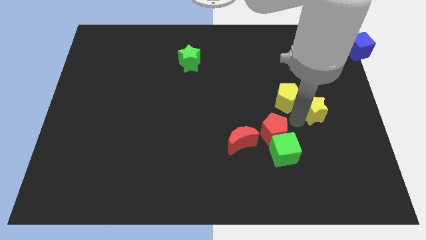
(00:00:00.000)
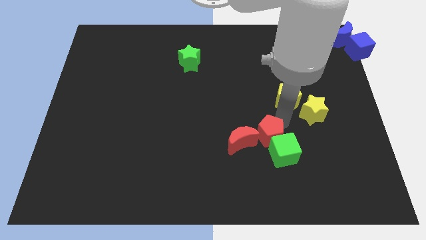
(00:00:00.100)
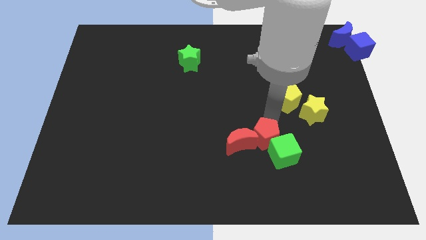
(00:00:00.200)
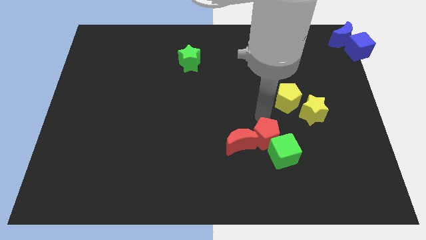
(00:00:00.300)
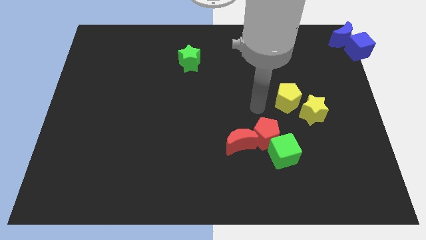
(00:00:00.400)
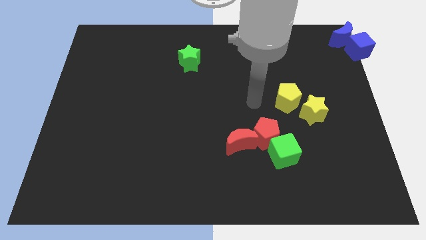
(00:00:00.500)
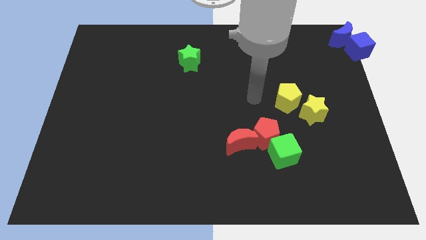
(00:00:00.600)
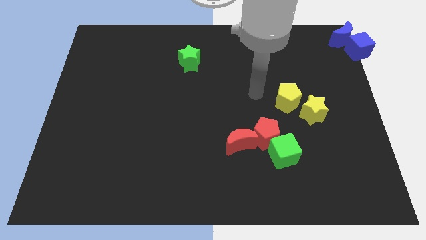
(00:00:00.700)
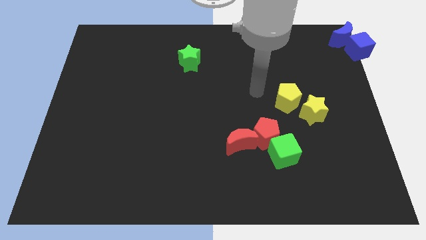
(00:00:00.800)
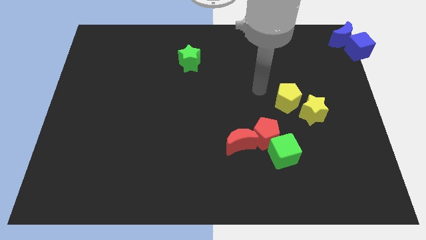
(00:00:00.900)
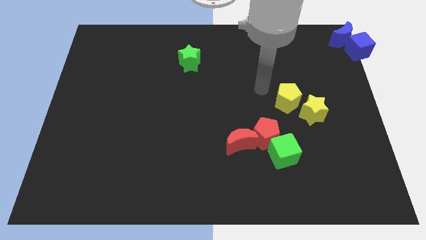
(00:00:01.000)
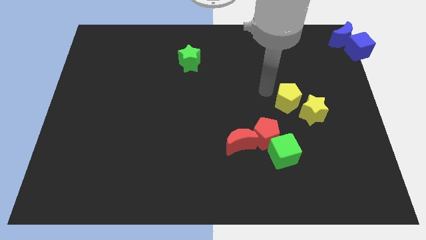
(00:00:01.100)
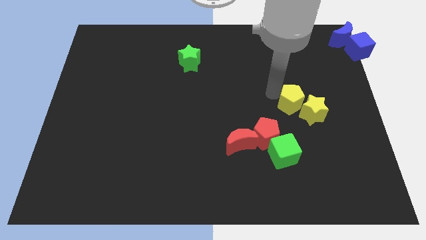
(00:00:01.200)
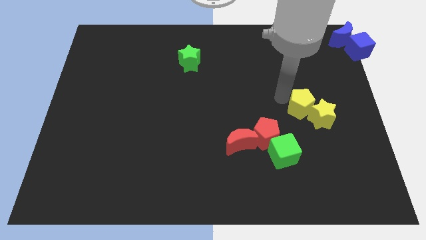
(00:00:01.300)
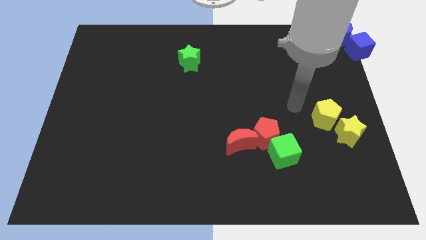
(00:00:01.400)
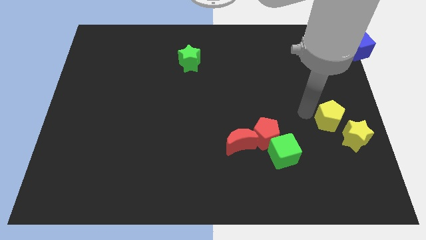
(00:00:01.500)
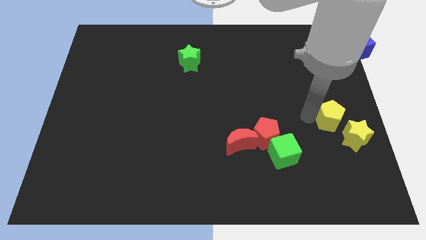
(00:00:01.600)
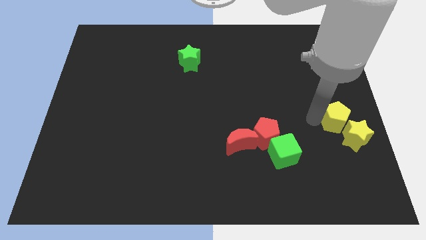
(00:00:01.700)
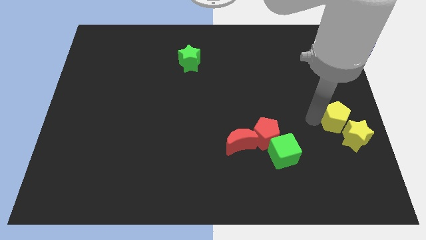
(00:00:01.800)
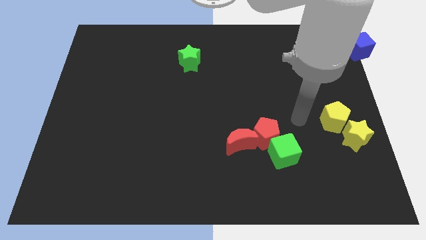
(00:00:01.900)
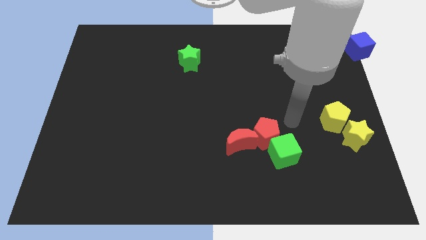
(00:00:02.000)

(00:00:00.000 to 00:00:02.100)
move yellow pentagon and yellow star towards the right side of the board

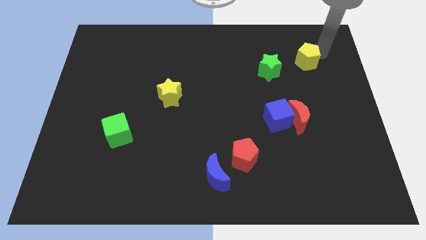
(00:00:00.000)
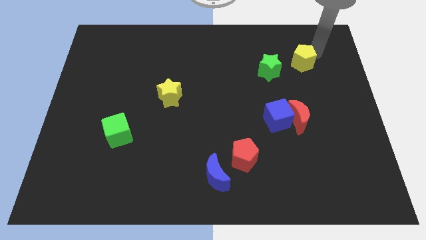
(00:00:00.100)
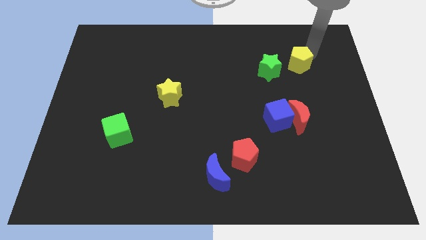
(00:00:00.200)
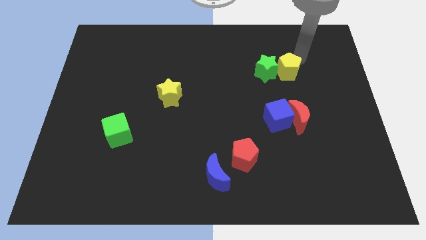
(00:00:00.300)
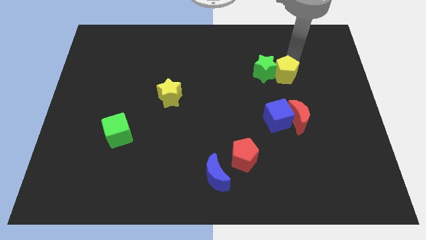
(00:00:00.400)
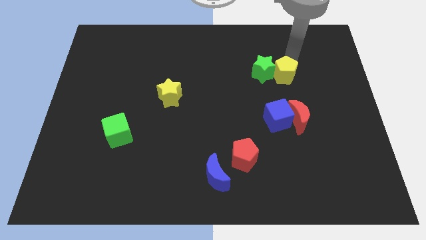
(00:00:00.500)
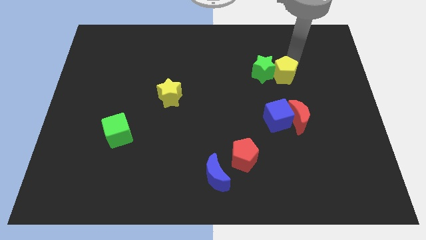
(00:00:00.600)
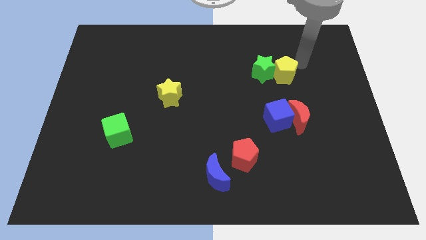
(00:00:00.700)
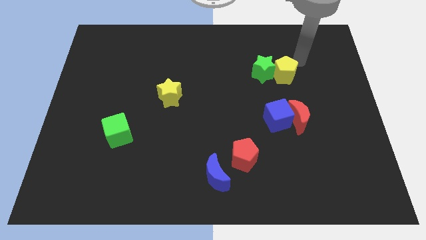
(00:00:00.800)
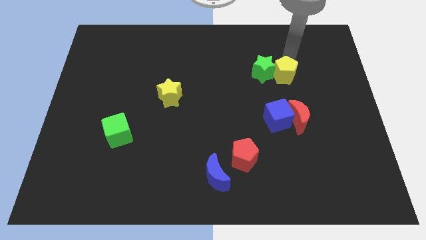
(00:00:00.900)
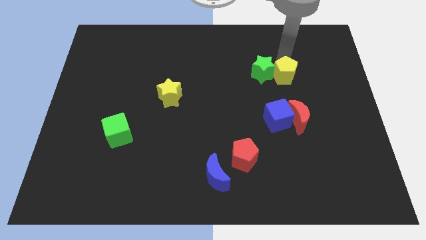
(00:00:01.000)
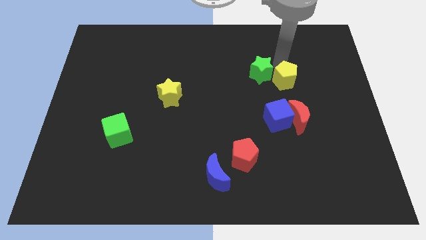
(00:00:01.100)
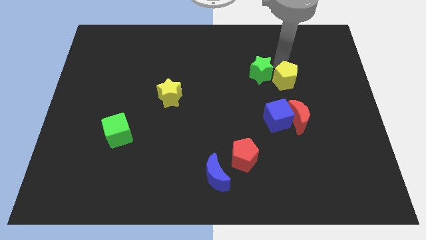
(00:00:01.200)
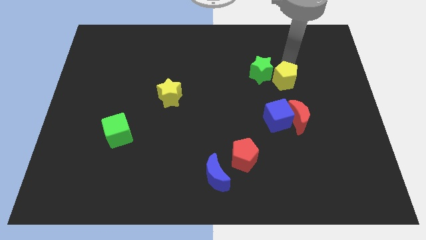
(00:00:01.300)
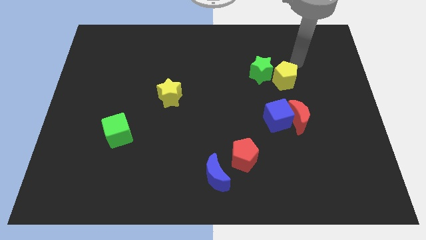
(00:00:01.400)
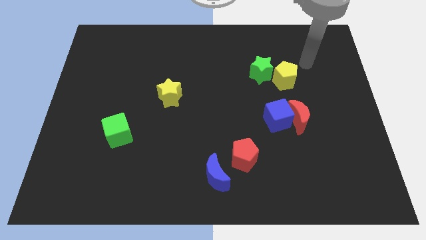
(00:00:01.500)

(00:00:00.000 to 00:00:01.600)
push the yellow pentagon into the green star

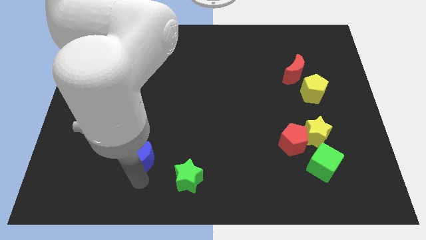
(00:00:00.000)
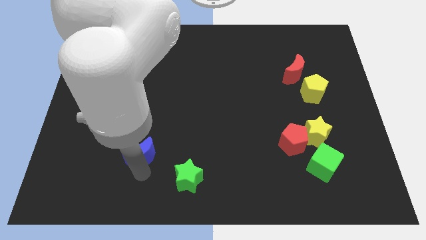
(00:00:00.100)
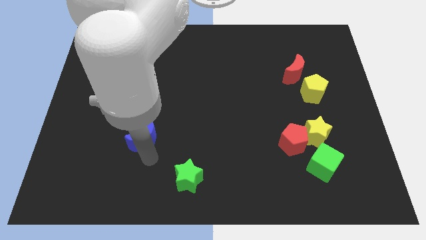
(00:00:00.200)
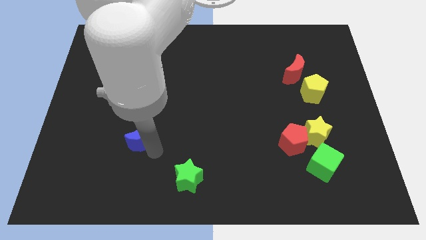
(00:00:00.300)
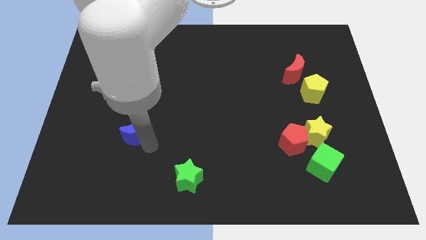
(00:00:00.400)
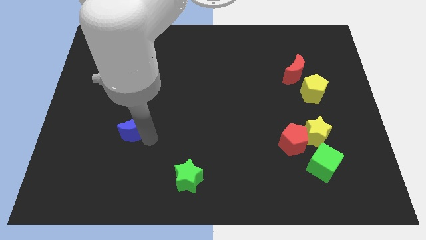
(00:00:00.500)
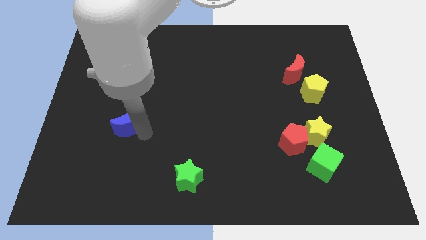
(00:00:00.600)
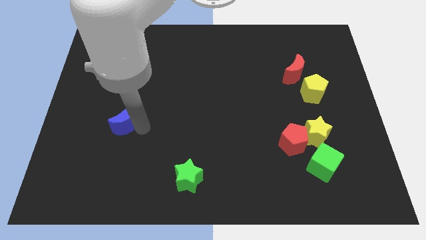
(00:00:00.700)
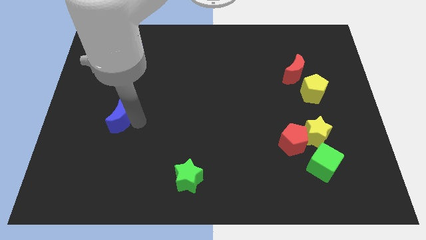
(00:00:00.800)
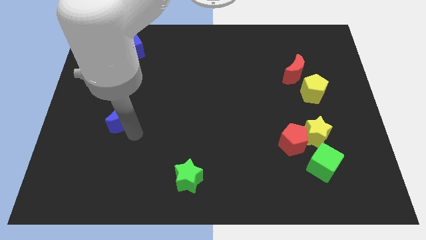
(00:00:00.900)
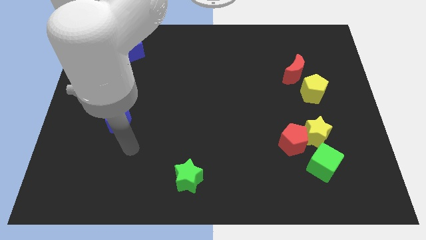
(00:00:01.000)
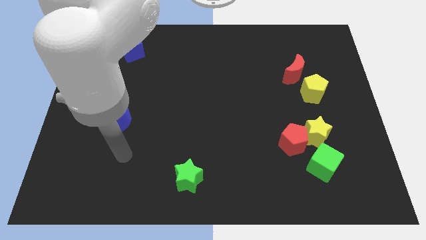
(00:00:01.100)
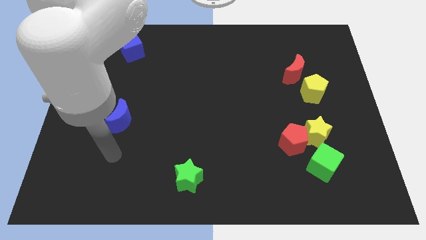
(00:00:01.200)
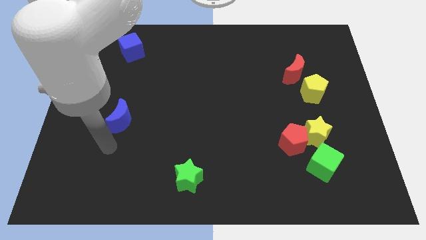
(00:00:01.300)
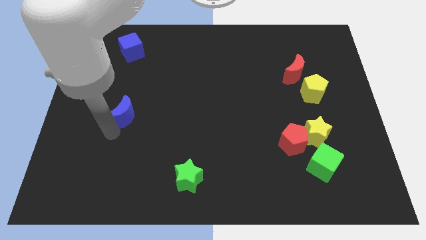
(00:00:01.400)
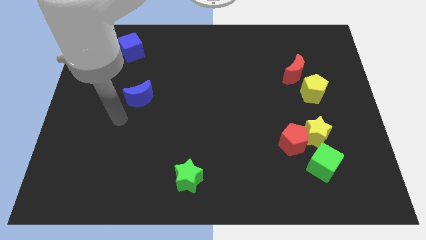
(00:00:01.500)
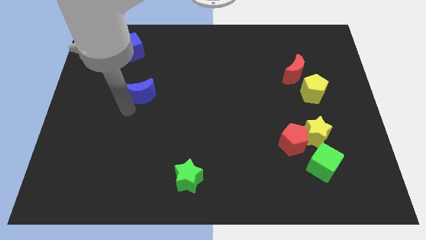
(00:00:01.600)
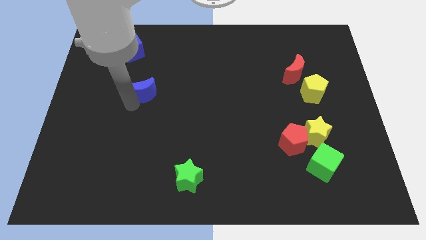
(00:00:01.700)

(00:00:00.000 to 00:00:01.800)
drag the blue moon towards the blue cube

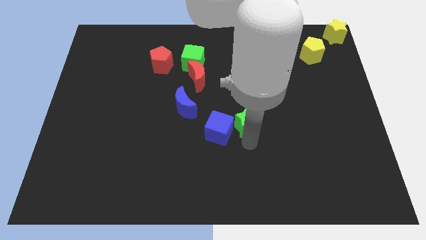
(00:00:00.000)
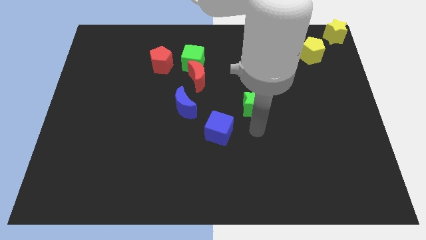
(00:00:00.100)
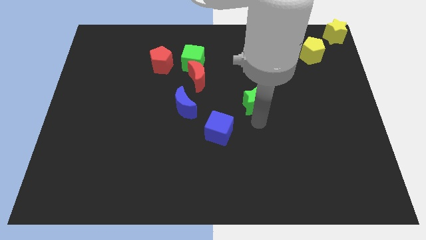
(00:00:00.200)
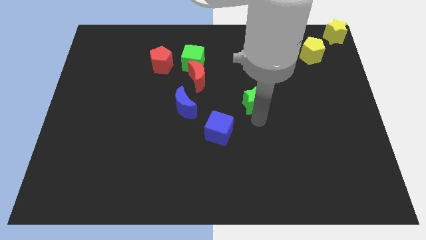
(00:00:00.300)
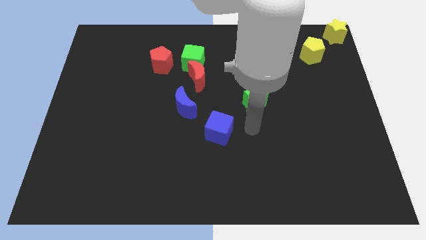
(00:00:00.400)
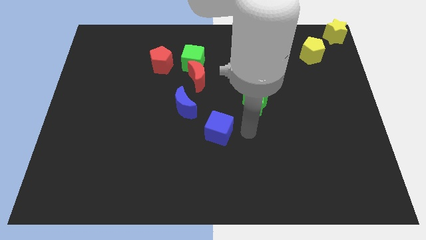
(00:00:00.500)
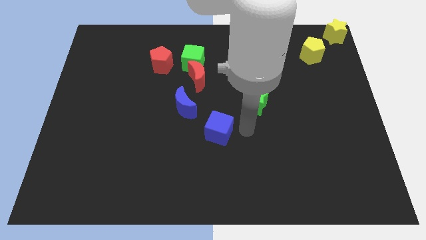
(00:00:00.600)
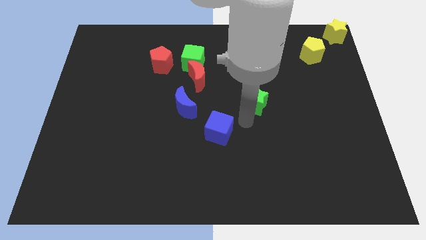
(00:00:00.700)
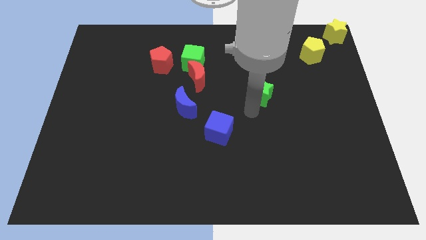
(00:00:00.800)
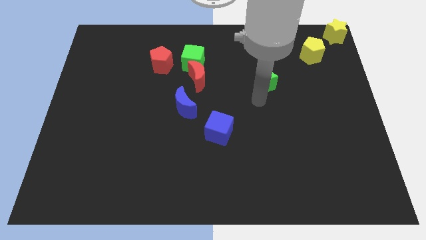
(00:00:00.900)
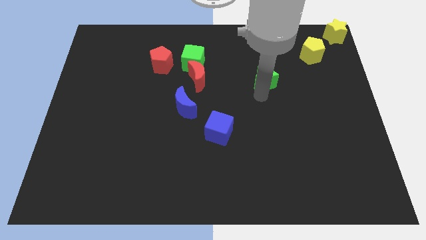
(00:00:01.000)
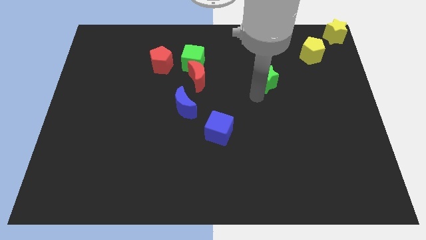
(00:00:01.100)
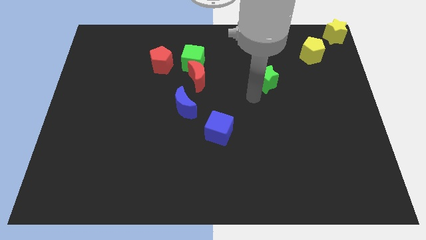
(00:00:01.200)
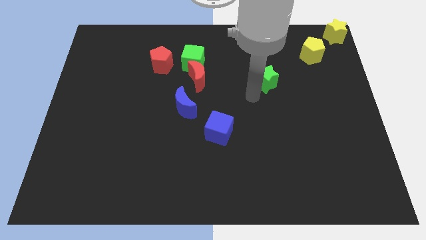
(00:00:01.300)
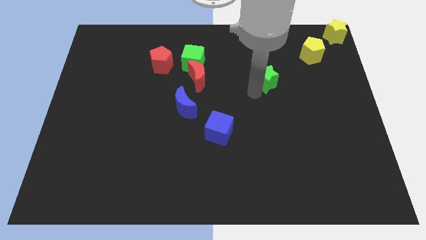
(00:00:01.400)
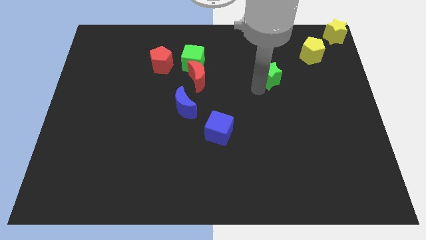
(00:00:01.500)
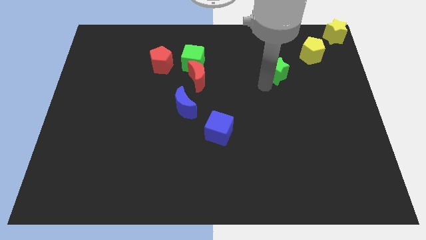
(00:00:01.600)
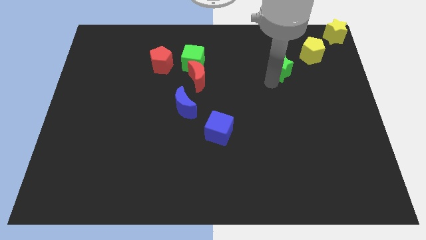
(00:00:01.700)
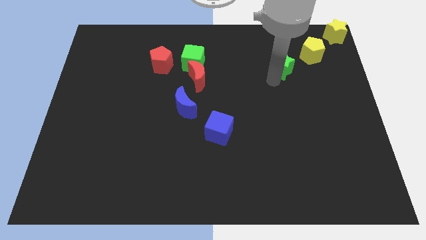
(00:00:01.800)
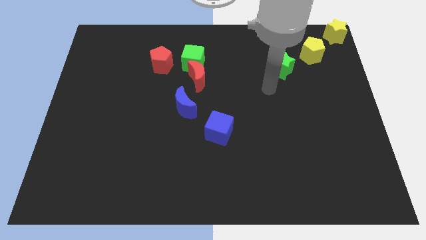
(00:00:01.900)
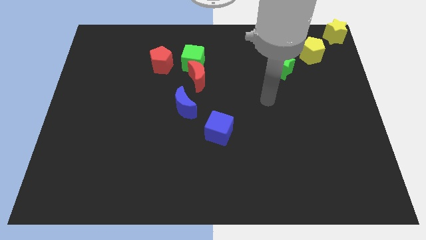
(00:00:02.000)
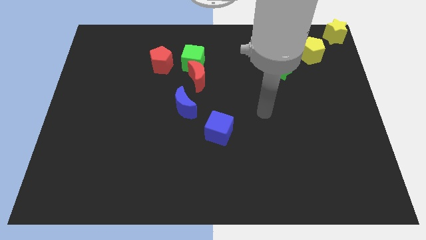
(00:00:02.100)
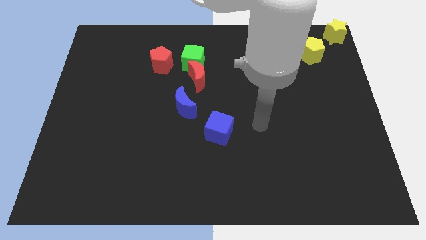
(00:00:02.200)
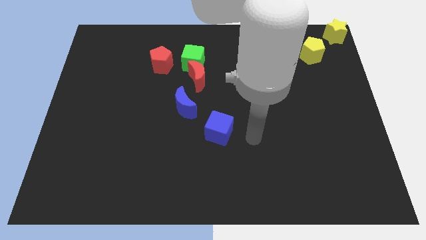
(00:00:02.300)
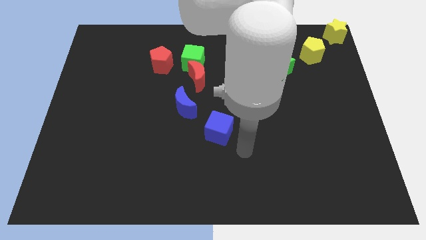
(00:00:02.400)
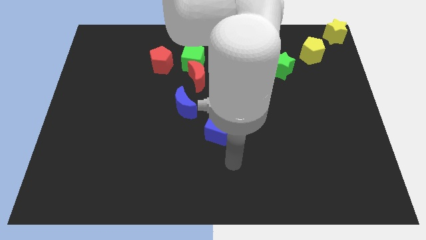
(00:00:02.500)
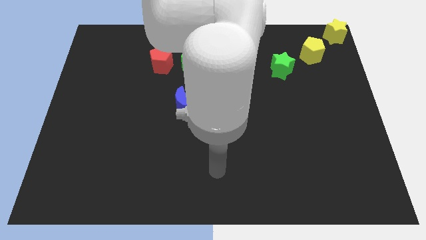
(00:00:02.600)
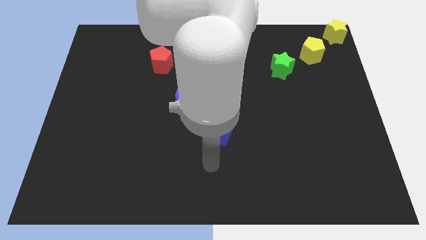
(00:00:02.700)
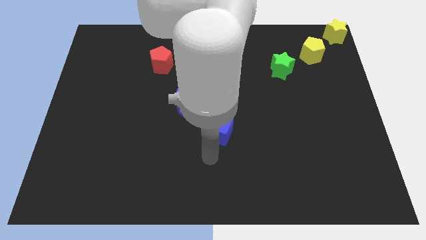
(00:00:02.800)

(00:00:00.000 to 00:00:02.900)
place the green star diagonally bottom left to yellow pentagon

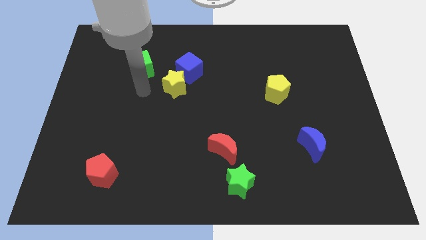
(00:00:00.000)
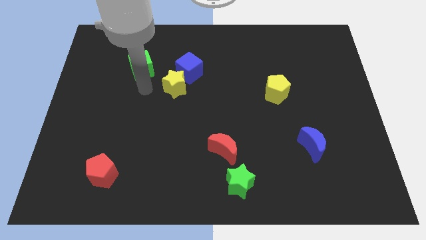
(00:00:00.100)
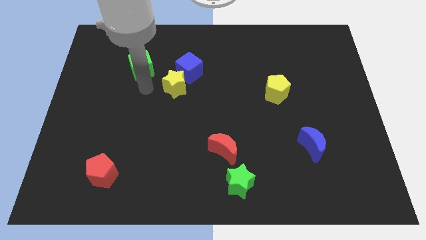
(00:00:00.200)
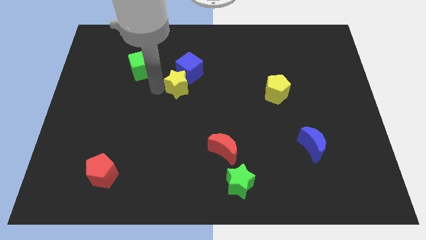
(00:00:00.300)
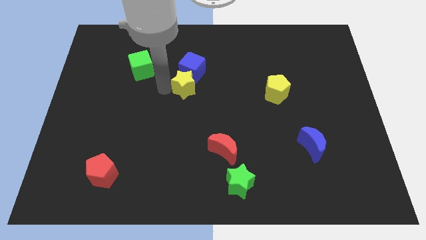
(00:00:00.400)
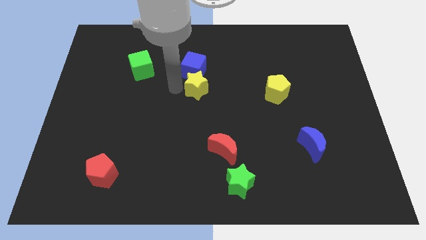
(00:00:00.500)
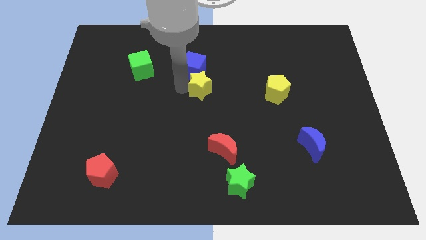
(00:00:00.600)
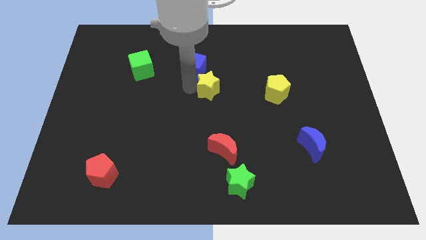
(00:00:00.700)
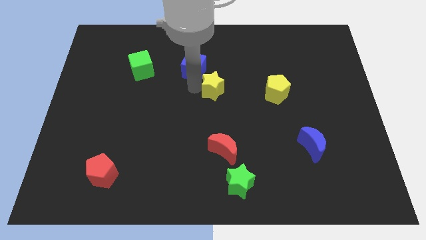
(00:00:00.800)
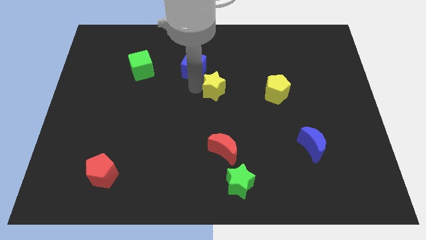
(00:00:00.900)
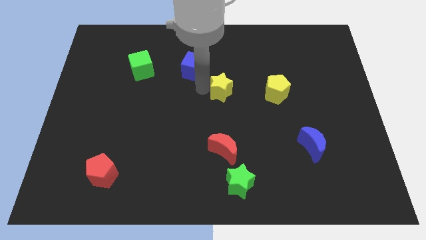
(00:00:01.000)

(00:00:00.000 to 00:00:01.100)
move the yellow star to the right side
